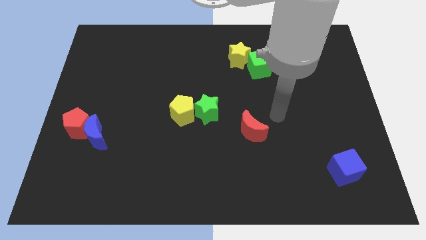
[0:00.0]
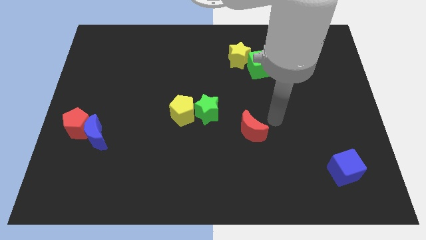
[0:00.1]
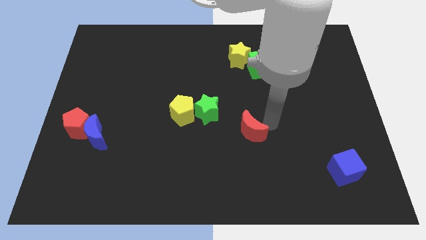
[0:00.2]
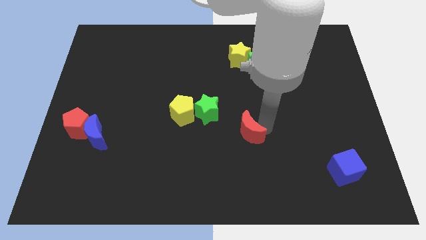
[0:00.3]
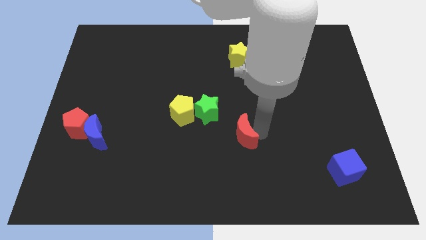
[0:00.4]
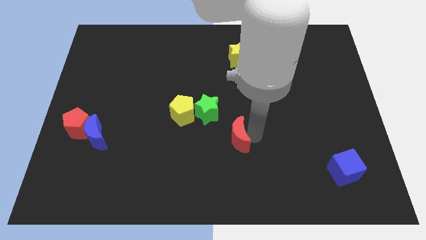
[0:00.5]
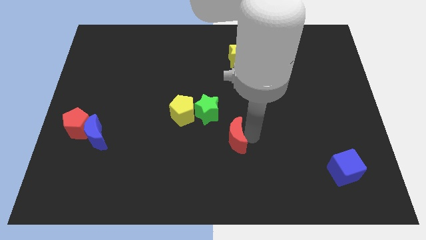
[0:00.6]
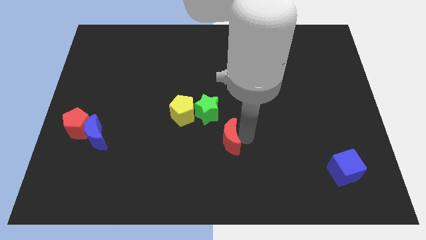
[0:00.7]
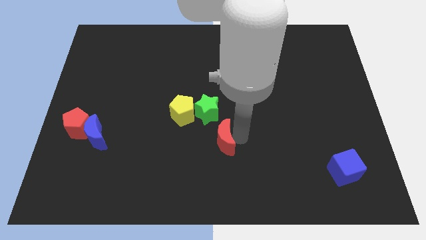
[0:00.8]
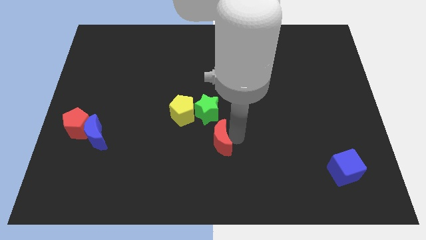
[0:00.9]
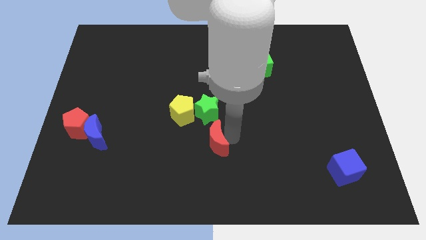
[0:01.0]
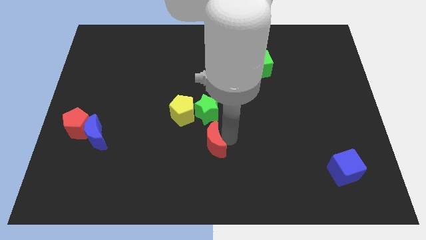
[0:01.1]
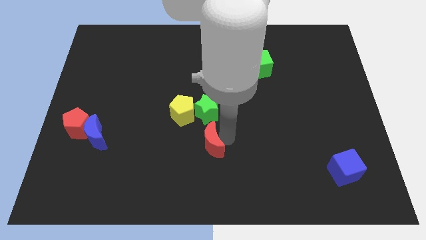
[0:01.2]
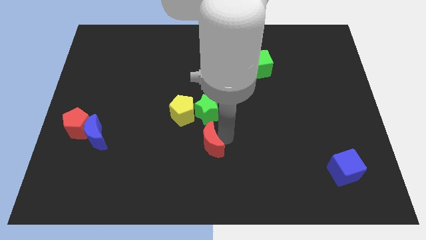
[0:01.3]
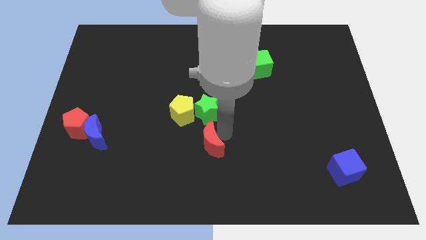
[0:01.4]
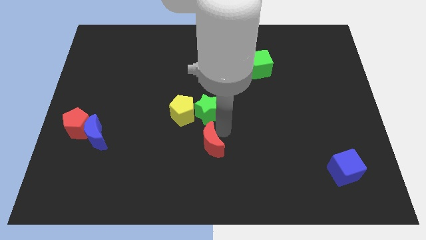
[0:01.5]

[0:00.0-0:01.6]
place the red moon below the green star

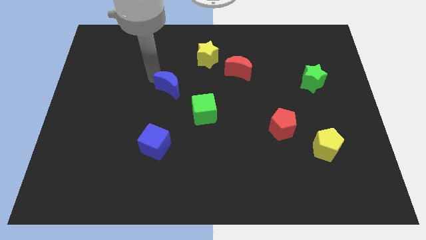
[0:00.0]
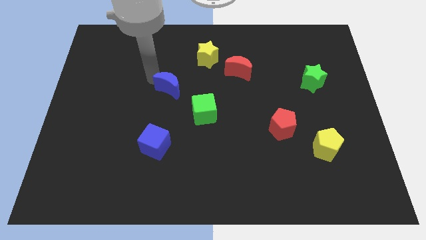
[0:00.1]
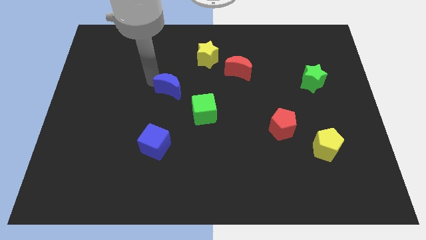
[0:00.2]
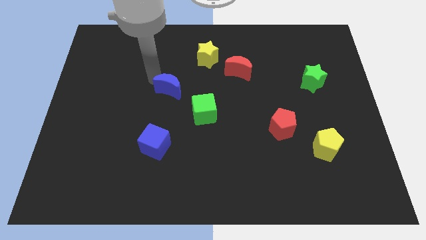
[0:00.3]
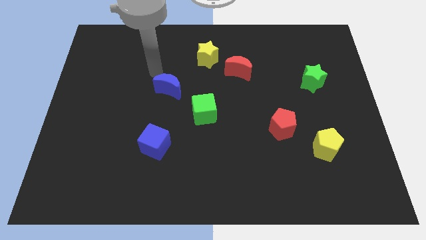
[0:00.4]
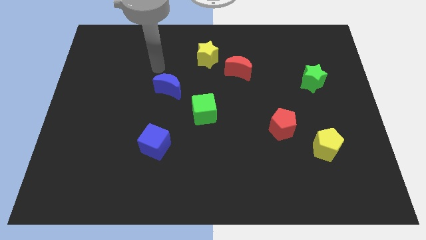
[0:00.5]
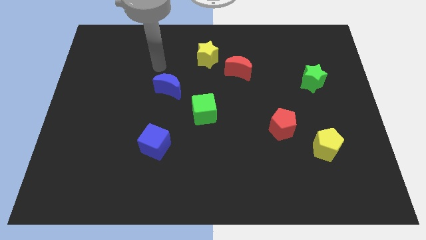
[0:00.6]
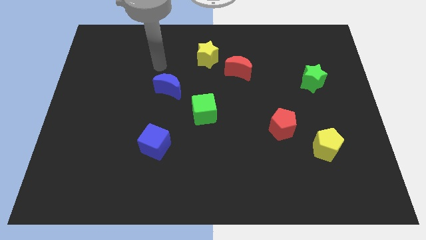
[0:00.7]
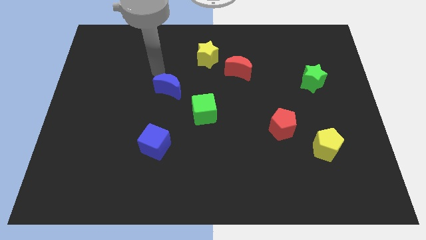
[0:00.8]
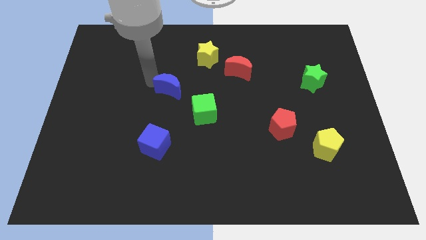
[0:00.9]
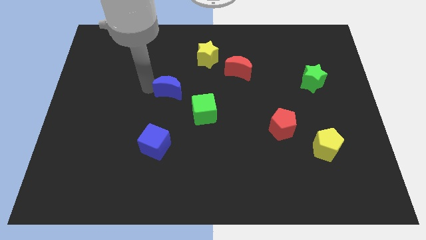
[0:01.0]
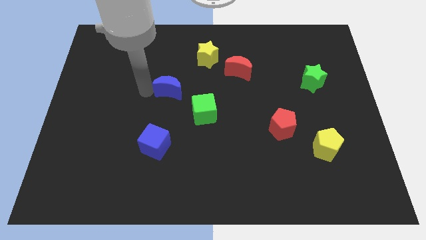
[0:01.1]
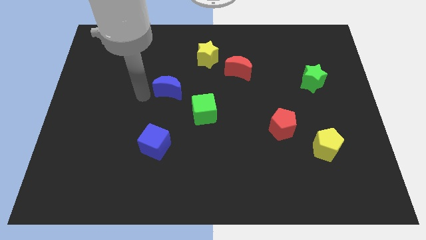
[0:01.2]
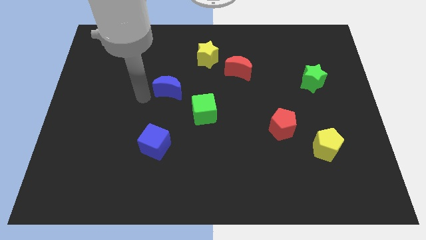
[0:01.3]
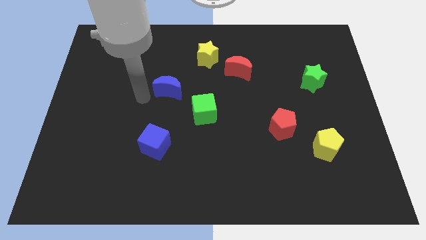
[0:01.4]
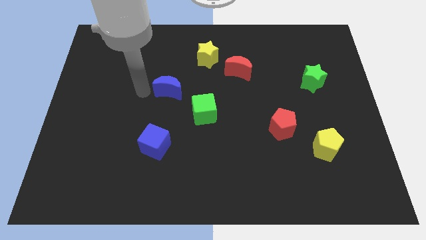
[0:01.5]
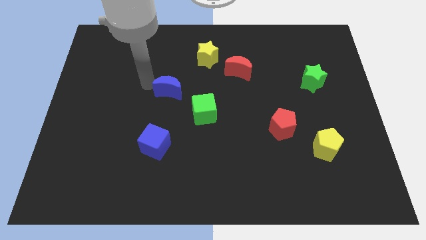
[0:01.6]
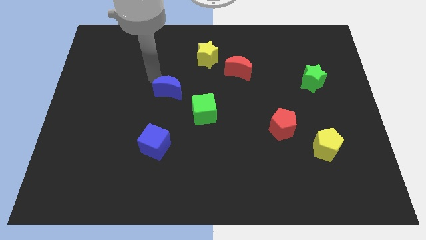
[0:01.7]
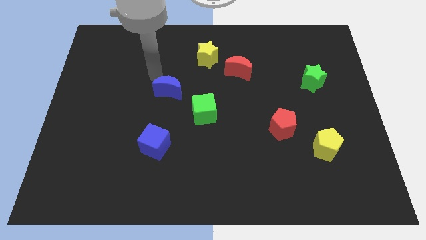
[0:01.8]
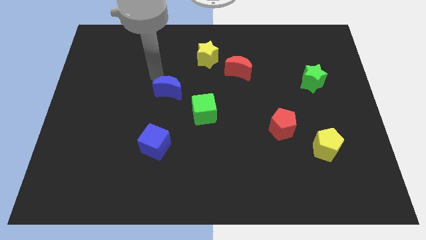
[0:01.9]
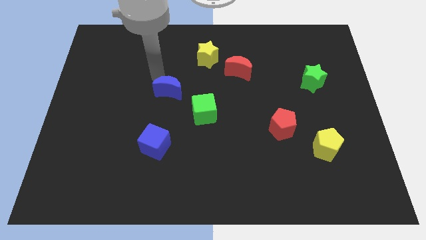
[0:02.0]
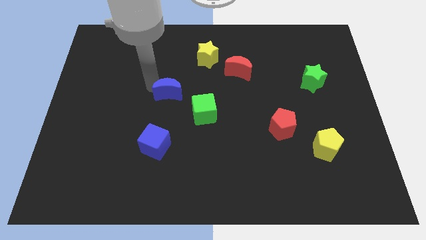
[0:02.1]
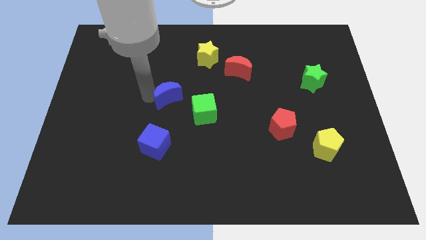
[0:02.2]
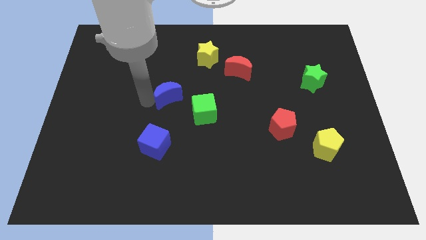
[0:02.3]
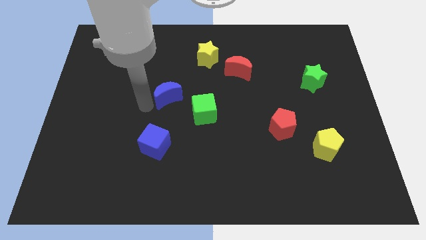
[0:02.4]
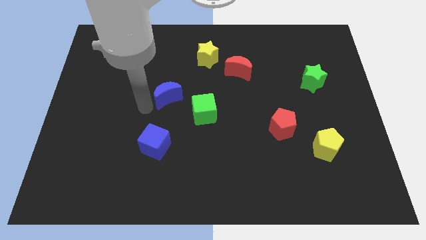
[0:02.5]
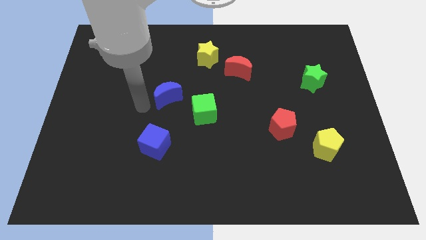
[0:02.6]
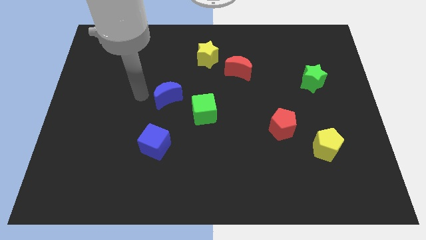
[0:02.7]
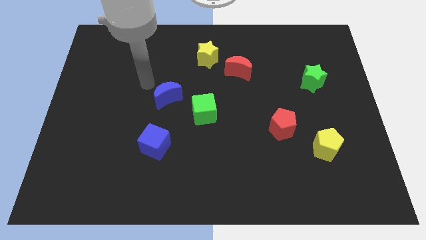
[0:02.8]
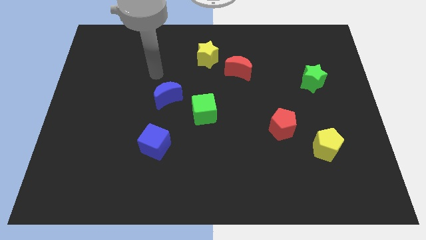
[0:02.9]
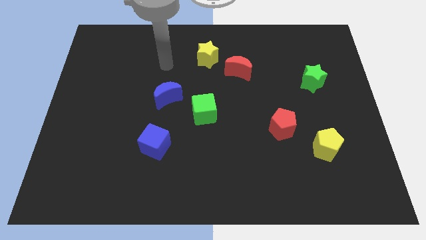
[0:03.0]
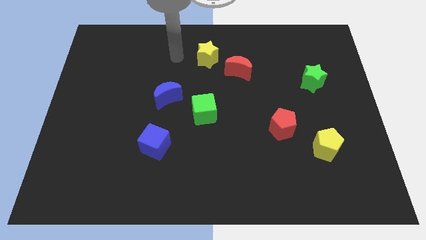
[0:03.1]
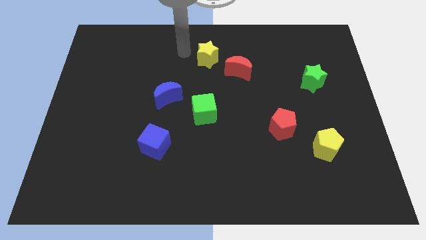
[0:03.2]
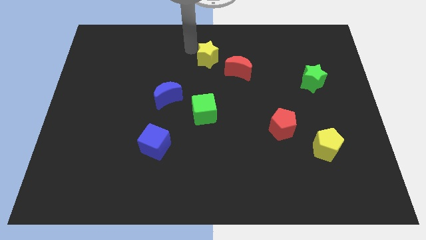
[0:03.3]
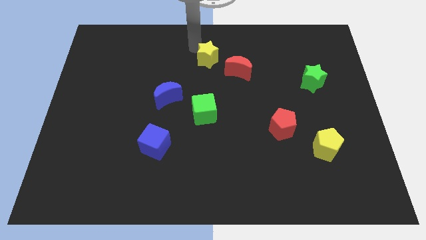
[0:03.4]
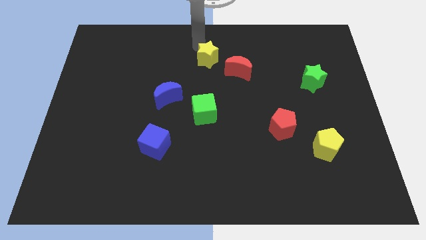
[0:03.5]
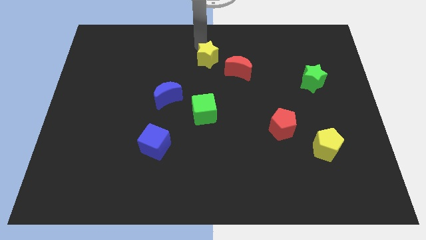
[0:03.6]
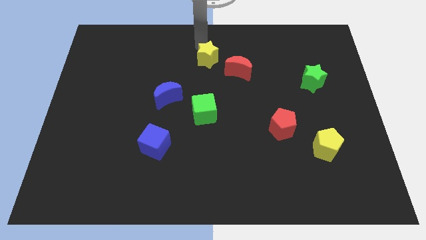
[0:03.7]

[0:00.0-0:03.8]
push the blue crescent slightly towards down

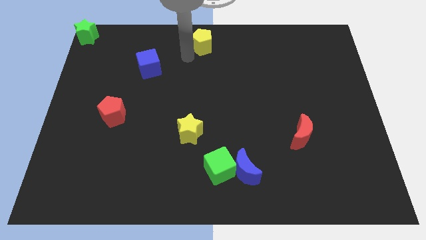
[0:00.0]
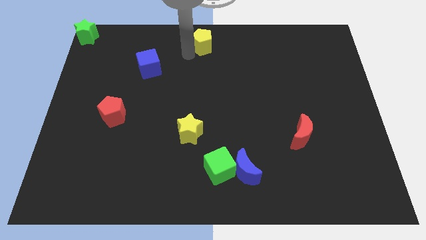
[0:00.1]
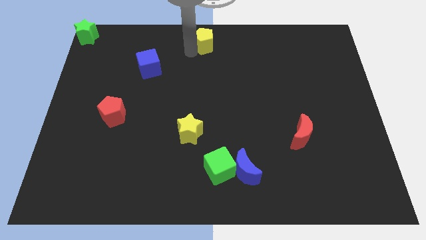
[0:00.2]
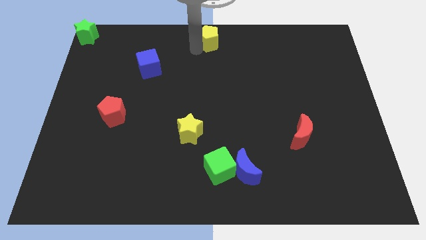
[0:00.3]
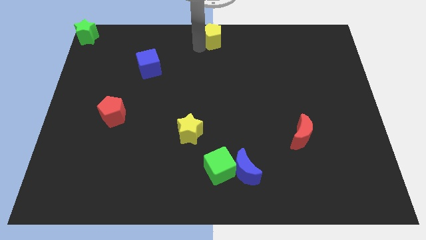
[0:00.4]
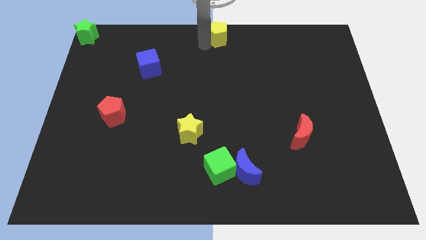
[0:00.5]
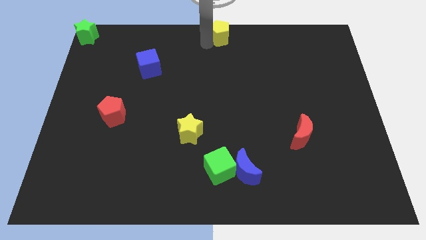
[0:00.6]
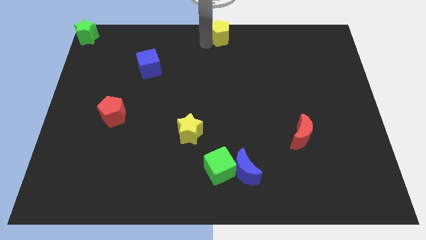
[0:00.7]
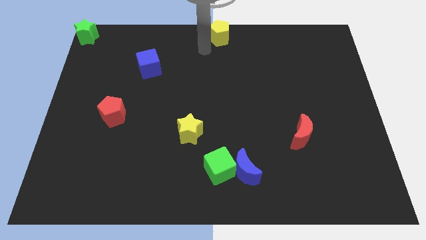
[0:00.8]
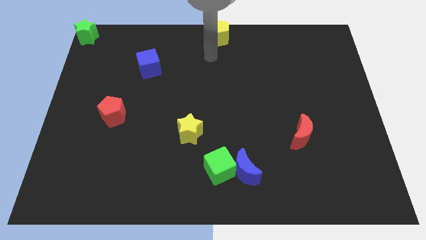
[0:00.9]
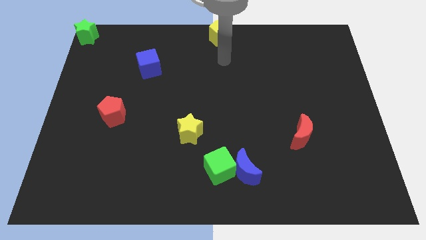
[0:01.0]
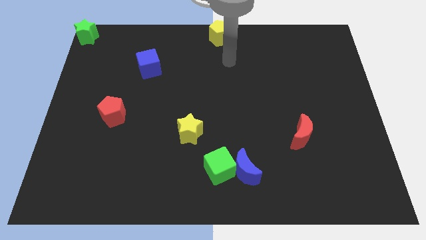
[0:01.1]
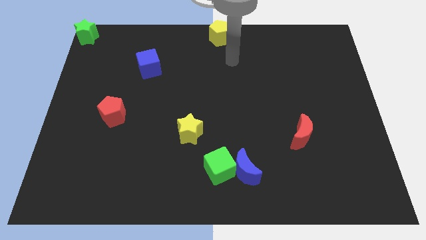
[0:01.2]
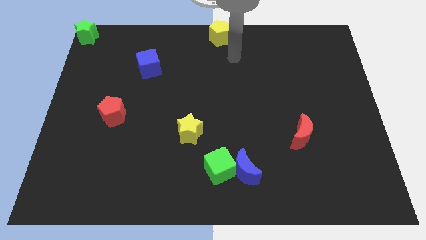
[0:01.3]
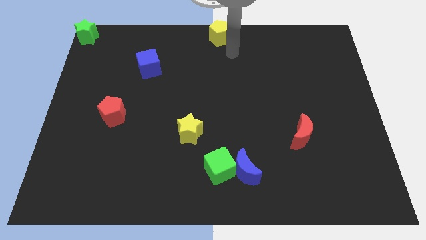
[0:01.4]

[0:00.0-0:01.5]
move the yellow pentagon to the top center of the board

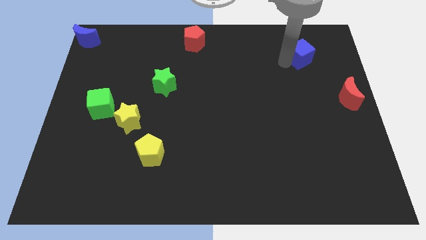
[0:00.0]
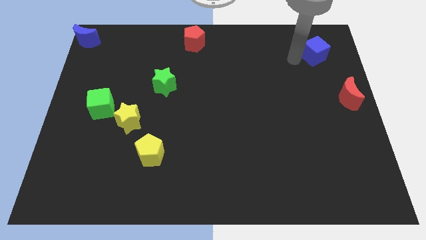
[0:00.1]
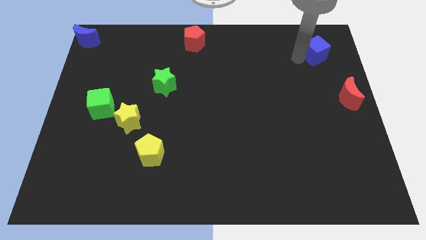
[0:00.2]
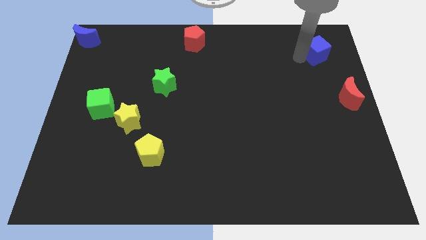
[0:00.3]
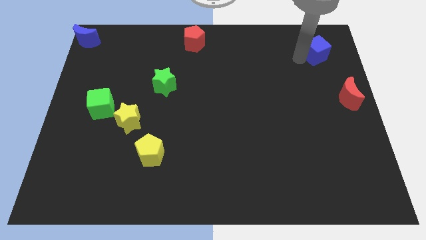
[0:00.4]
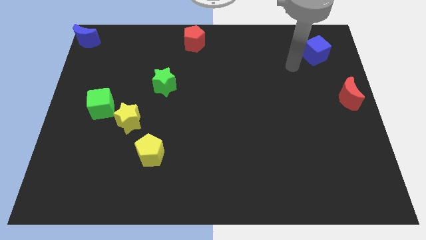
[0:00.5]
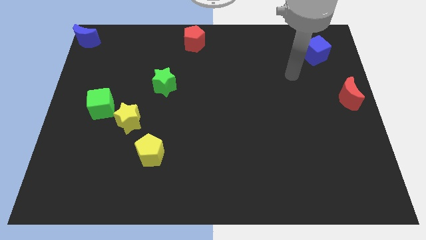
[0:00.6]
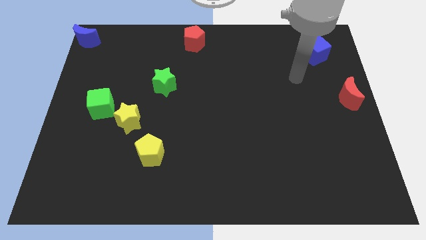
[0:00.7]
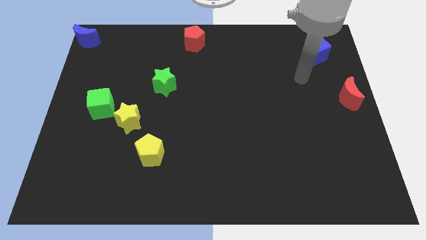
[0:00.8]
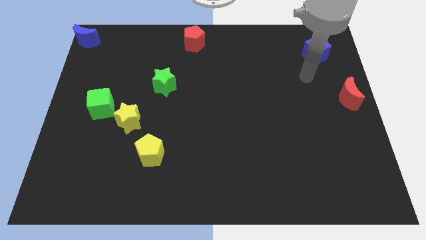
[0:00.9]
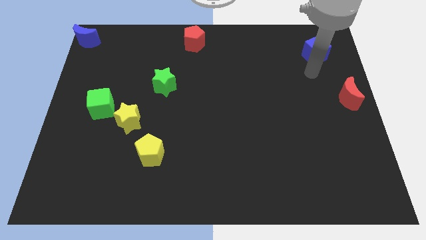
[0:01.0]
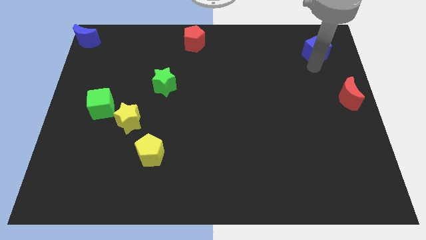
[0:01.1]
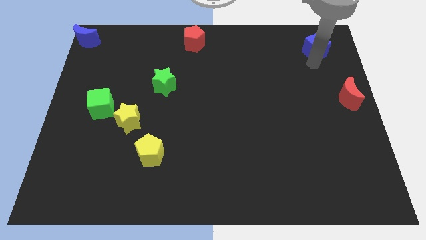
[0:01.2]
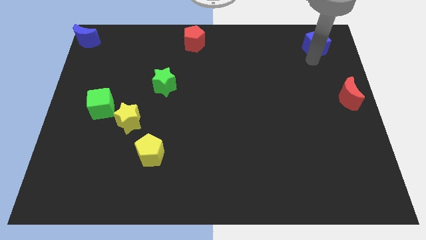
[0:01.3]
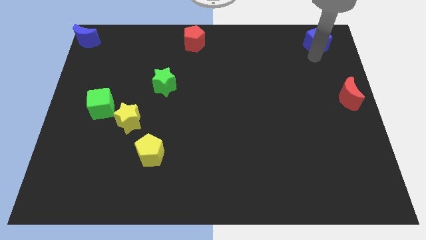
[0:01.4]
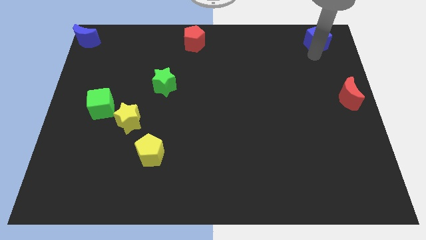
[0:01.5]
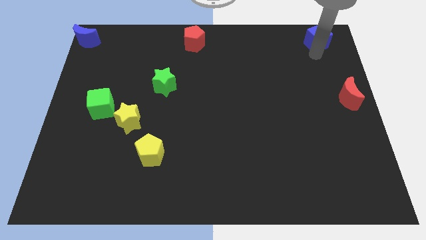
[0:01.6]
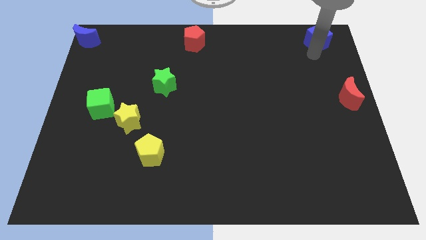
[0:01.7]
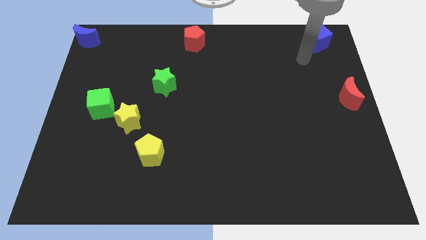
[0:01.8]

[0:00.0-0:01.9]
place the blue cube at the top right corner

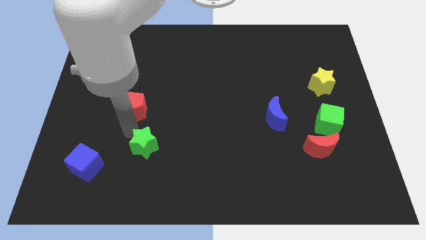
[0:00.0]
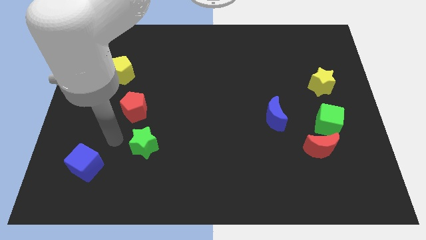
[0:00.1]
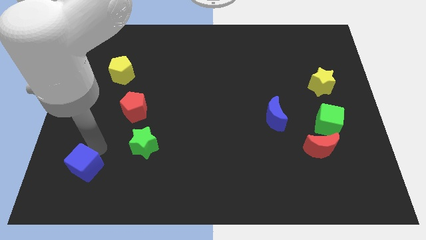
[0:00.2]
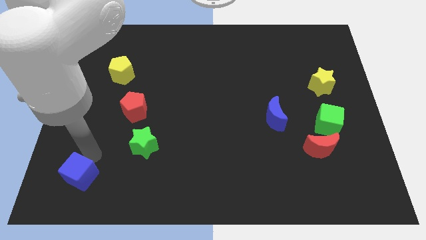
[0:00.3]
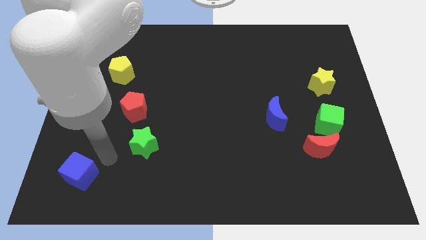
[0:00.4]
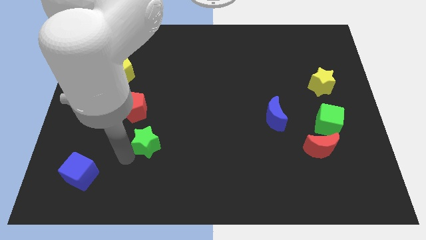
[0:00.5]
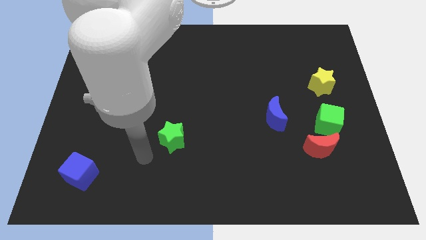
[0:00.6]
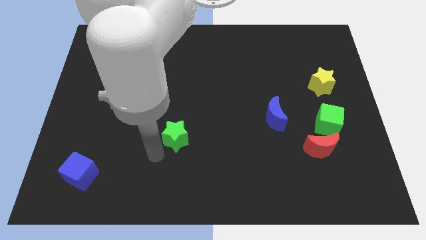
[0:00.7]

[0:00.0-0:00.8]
move the blue cube slightly to the down
